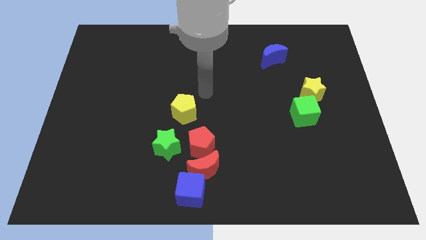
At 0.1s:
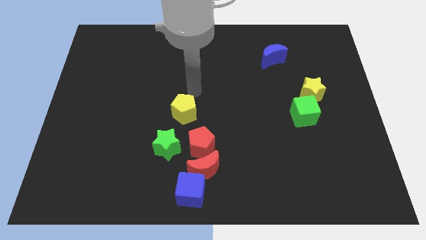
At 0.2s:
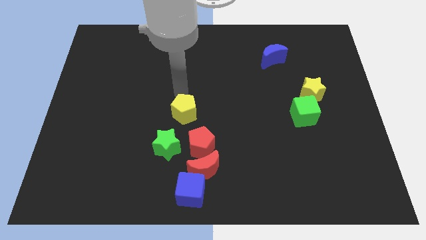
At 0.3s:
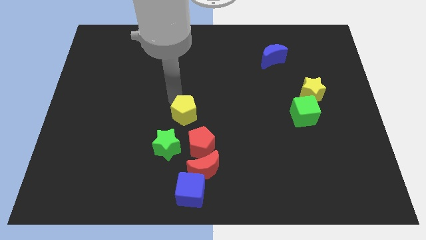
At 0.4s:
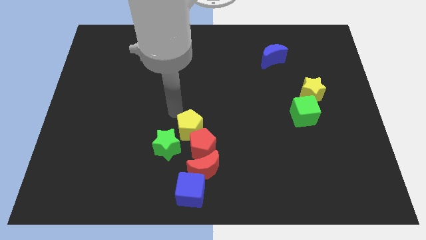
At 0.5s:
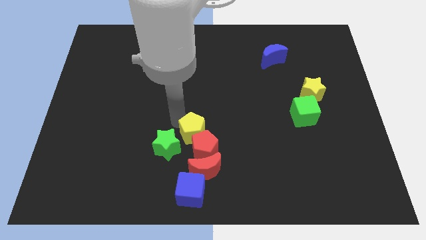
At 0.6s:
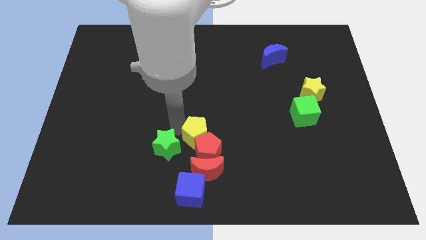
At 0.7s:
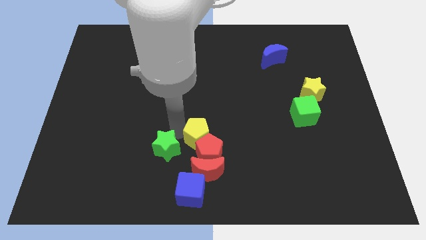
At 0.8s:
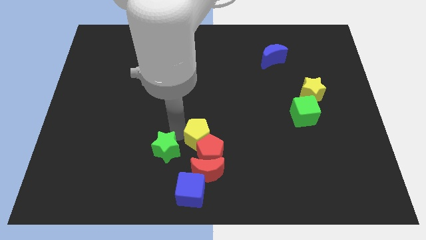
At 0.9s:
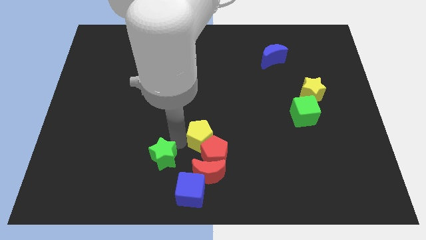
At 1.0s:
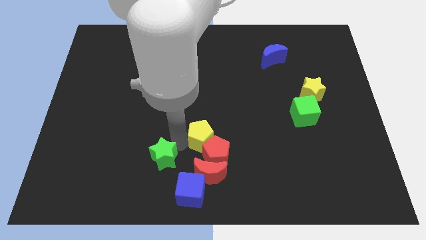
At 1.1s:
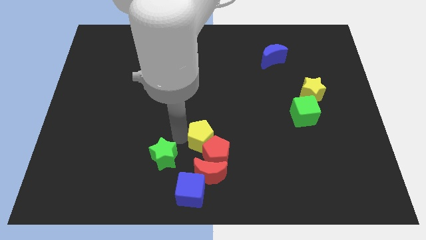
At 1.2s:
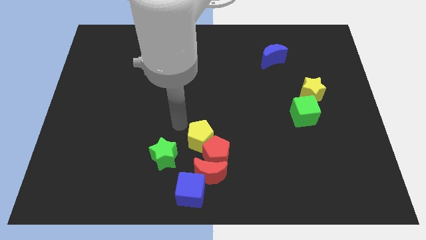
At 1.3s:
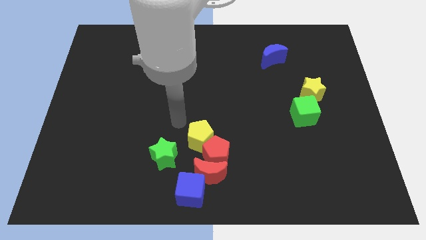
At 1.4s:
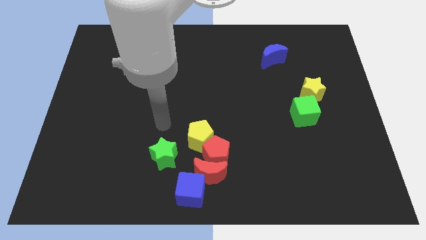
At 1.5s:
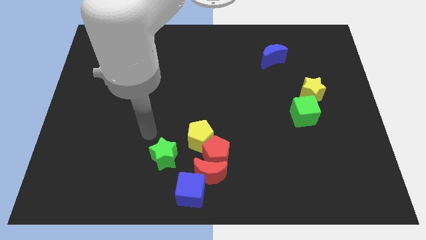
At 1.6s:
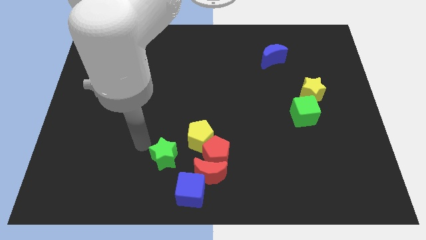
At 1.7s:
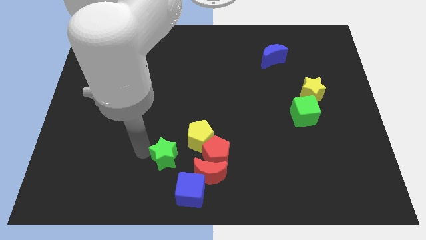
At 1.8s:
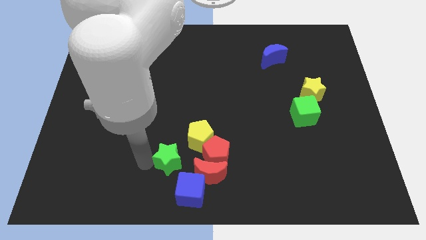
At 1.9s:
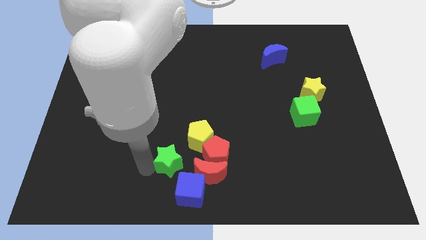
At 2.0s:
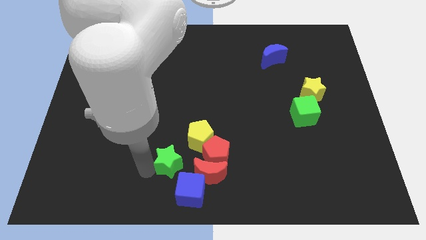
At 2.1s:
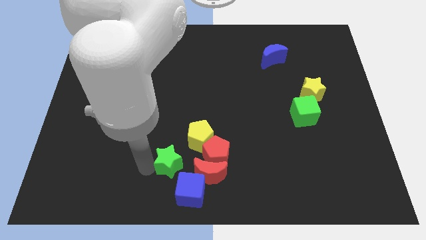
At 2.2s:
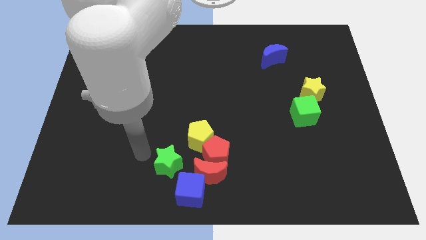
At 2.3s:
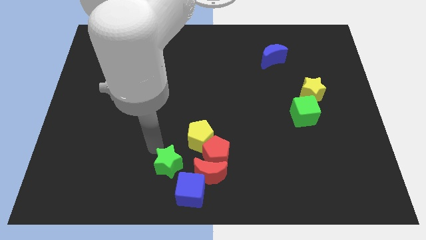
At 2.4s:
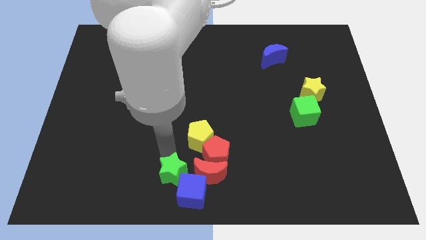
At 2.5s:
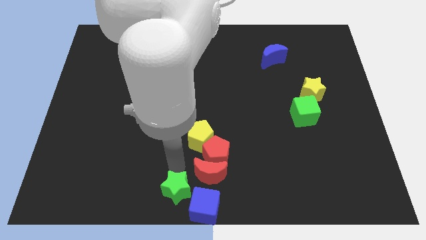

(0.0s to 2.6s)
push yellow pentagon above the red pentagon and green star into blue cube

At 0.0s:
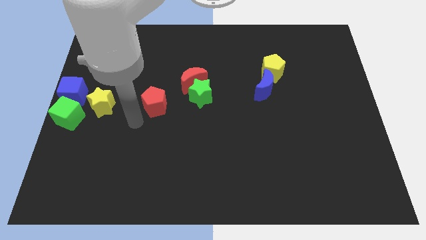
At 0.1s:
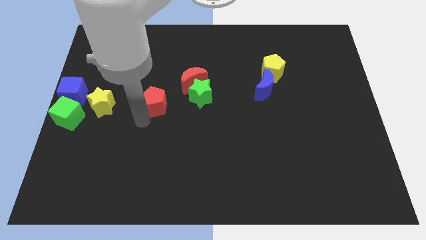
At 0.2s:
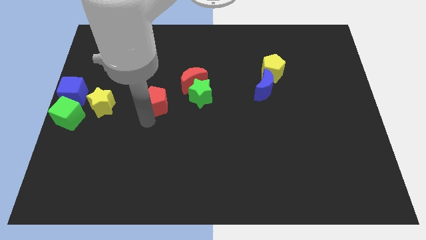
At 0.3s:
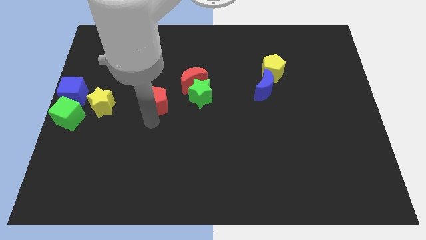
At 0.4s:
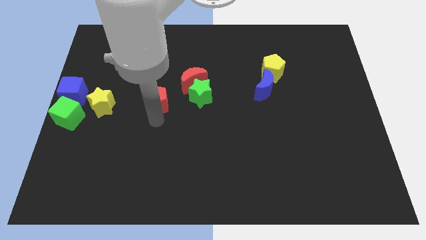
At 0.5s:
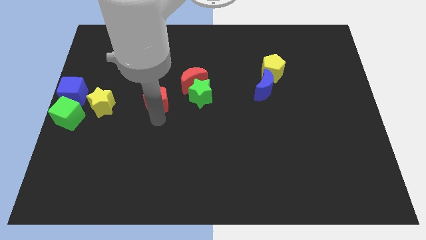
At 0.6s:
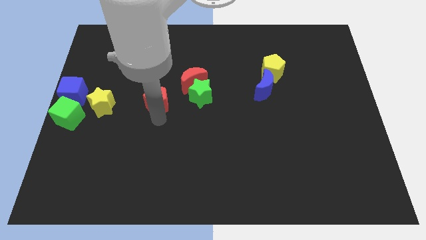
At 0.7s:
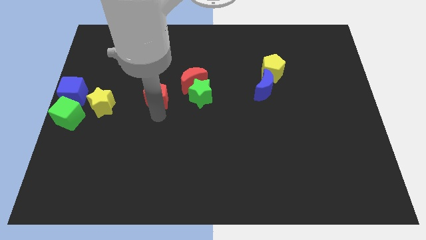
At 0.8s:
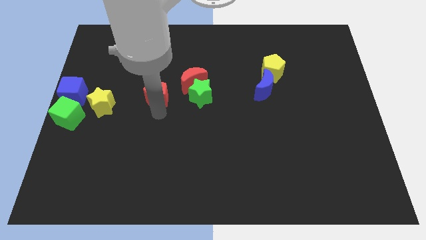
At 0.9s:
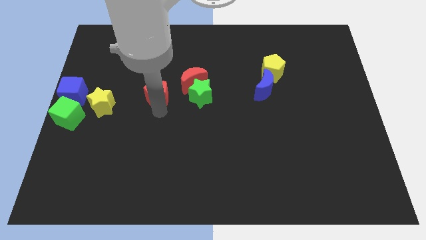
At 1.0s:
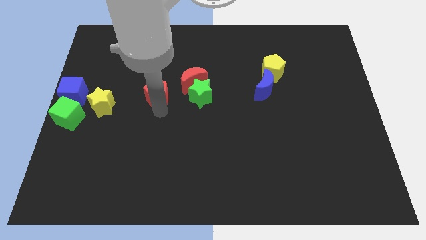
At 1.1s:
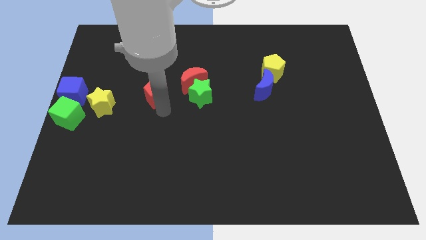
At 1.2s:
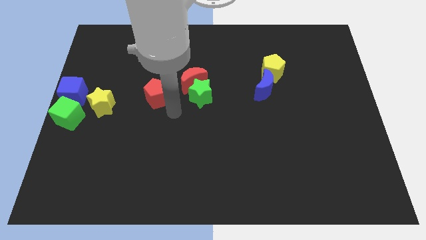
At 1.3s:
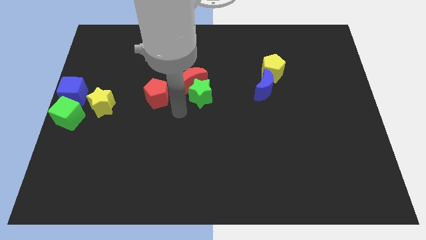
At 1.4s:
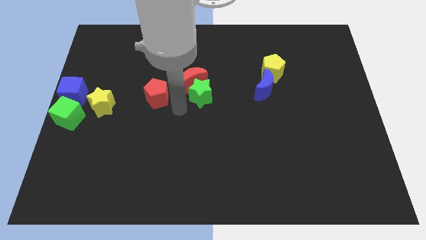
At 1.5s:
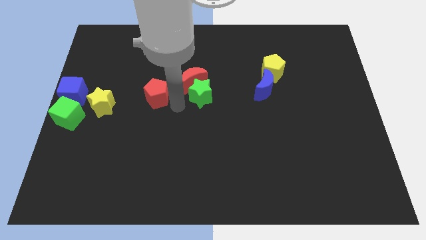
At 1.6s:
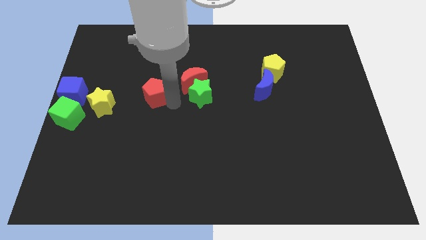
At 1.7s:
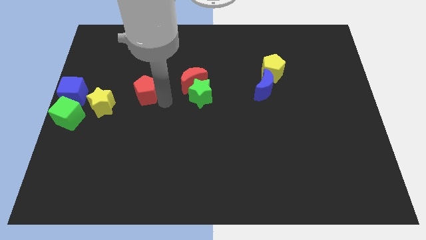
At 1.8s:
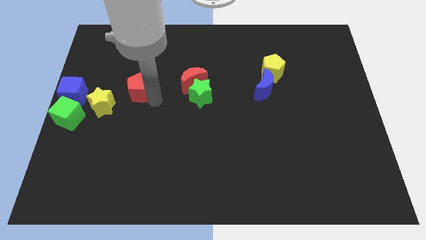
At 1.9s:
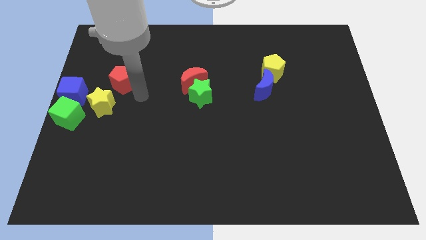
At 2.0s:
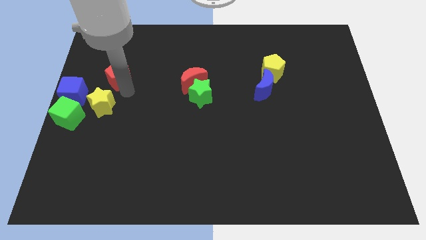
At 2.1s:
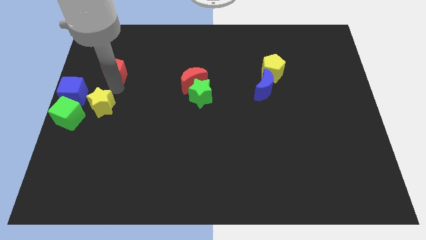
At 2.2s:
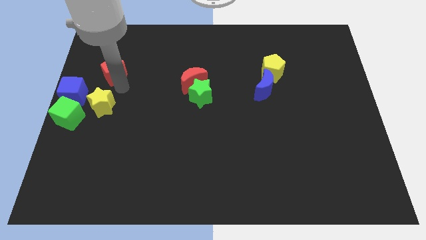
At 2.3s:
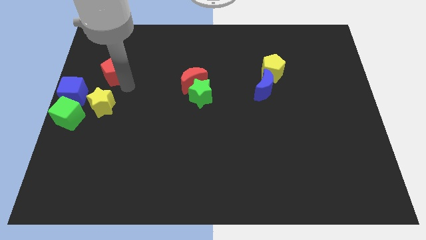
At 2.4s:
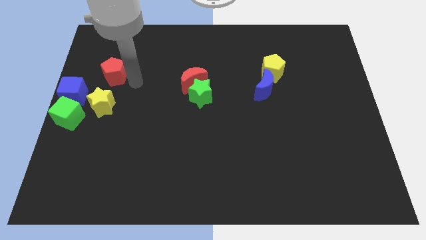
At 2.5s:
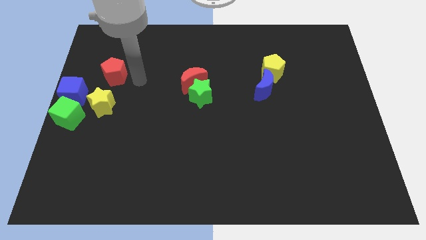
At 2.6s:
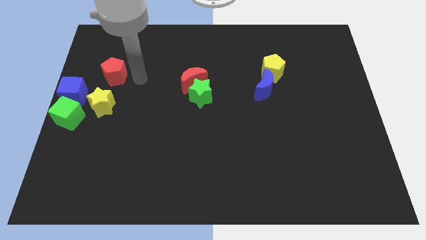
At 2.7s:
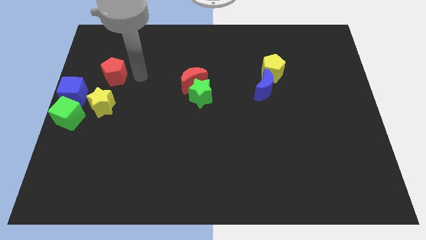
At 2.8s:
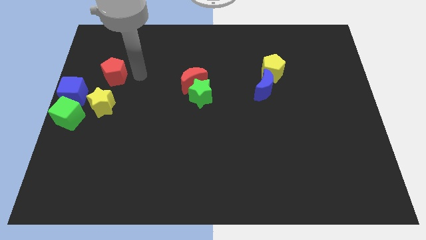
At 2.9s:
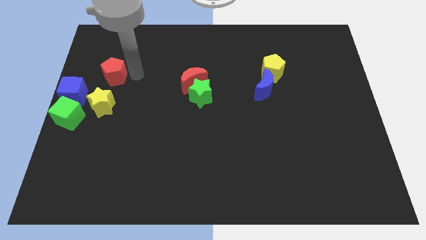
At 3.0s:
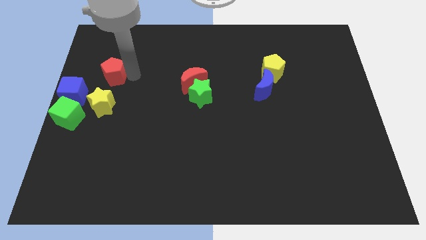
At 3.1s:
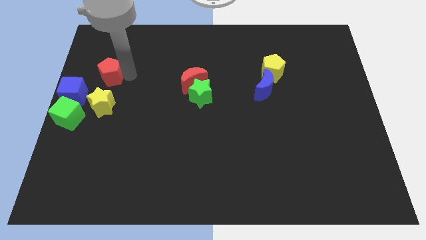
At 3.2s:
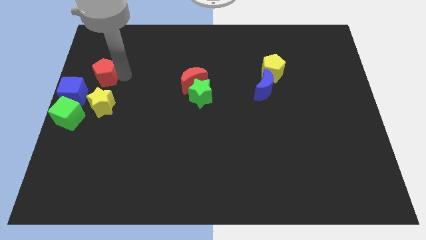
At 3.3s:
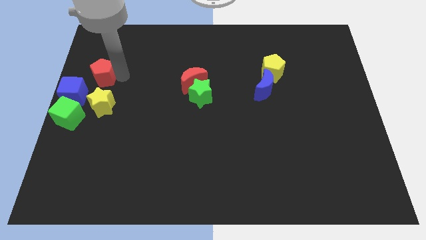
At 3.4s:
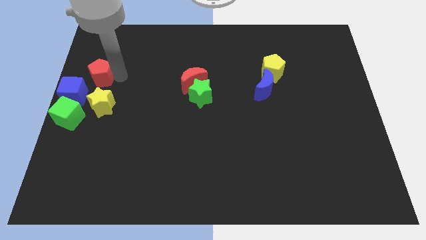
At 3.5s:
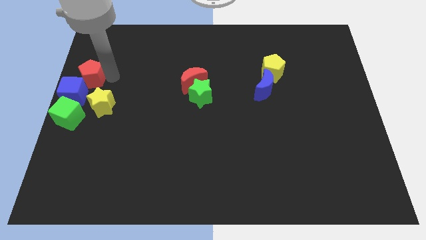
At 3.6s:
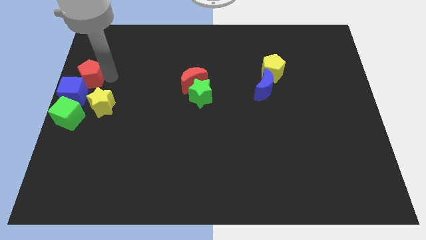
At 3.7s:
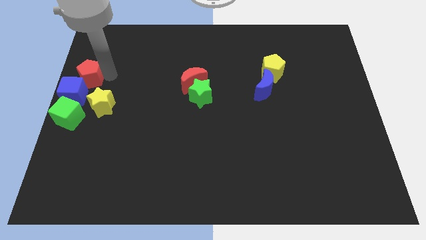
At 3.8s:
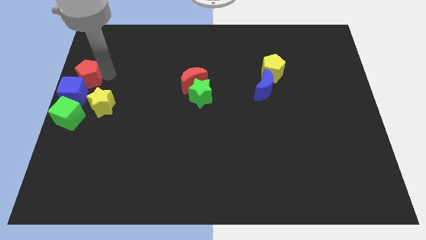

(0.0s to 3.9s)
place the red pentagon at the top of the yellow star

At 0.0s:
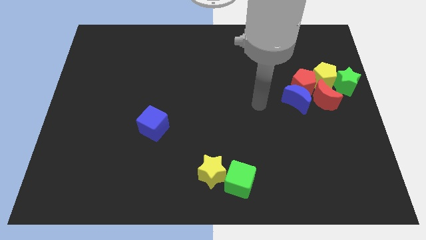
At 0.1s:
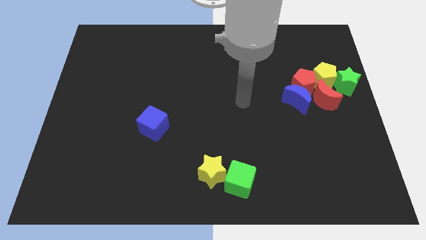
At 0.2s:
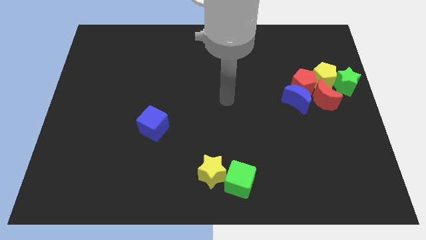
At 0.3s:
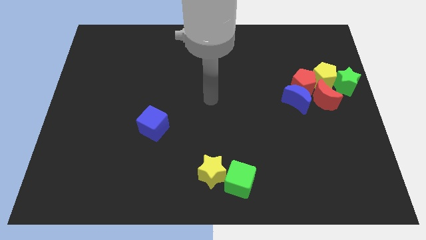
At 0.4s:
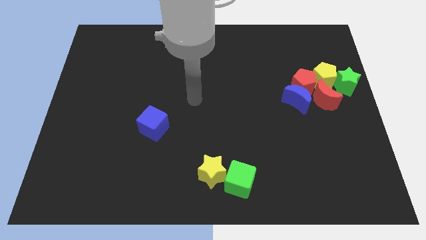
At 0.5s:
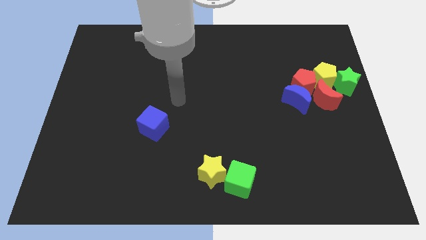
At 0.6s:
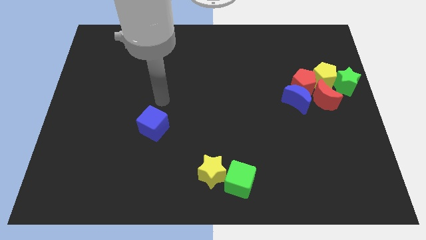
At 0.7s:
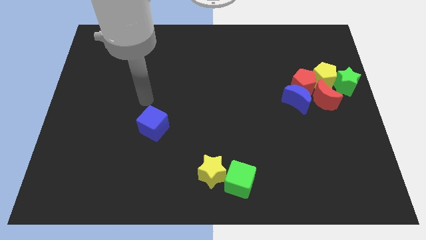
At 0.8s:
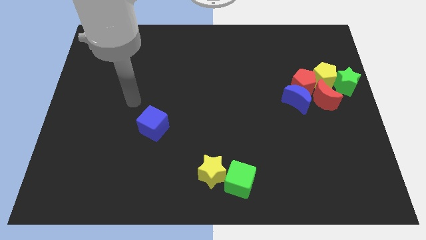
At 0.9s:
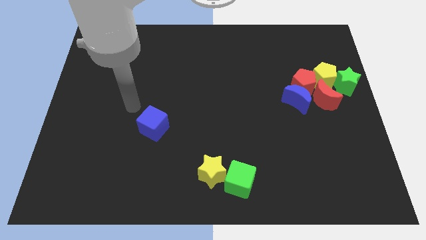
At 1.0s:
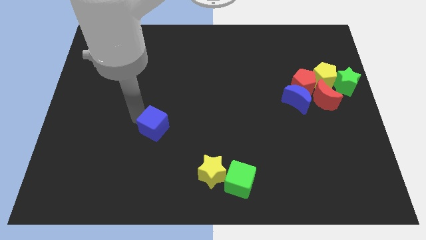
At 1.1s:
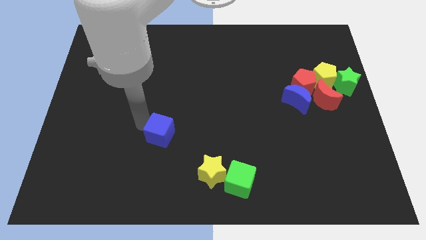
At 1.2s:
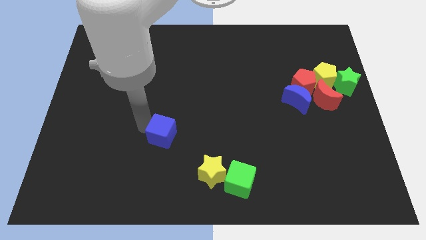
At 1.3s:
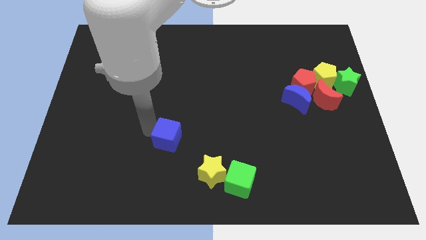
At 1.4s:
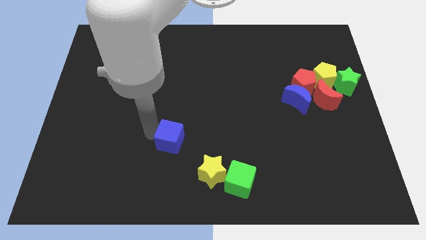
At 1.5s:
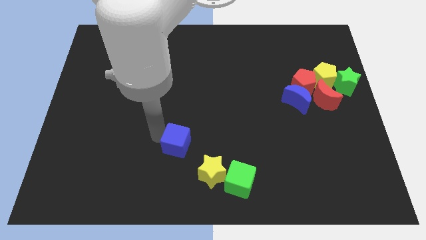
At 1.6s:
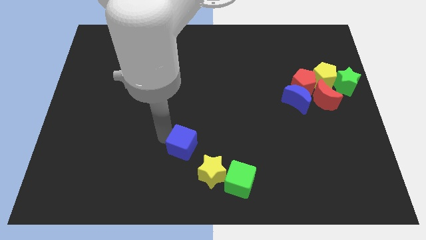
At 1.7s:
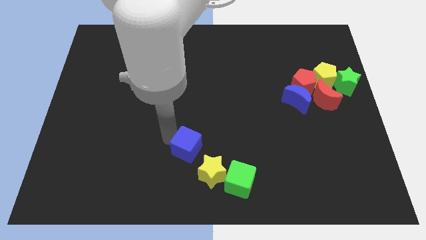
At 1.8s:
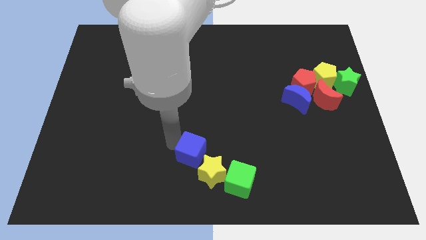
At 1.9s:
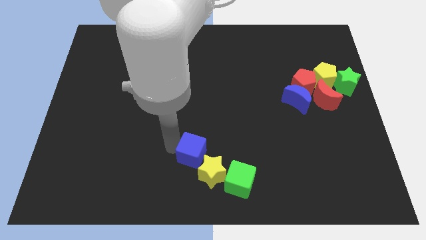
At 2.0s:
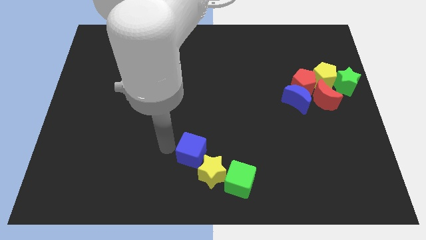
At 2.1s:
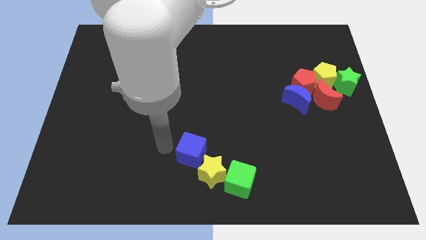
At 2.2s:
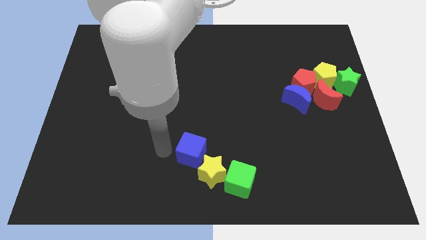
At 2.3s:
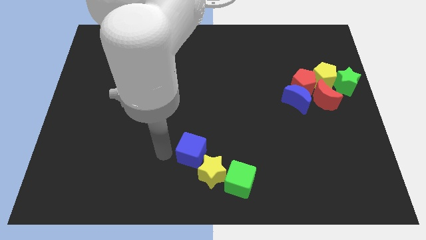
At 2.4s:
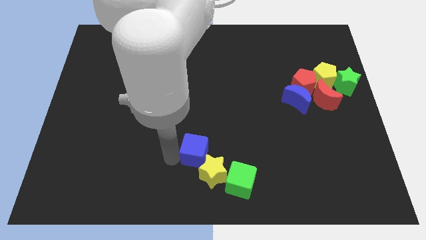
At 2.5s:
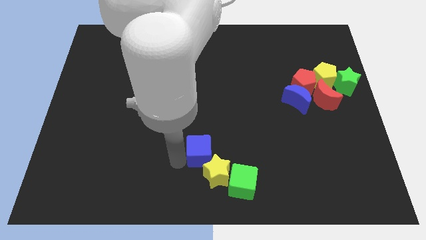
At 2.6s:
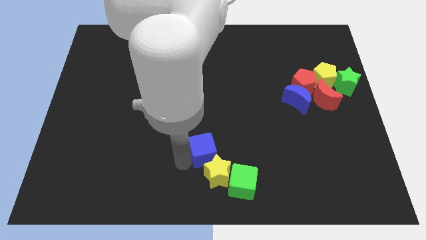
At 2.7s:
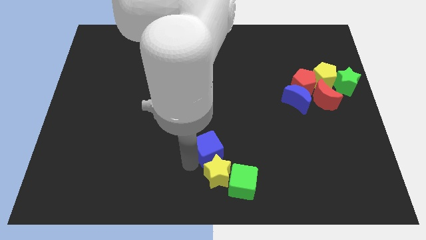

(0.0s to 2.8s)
push the blue cube into the yellow star
